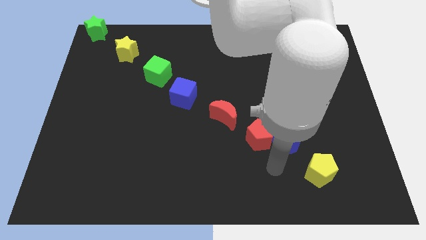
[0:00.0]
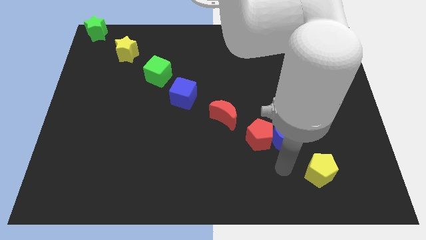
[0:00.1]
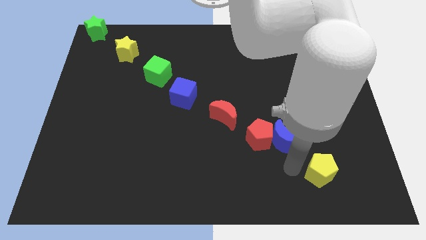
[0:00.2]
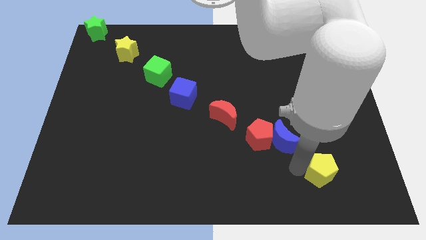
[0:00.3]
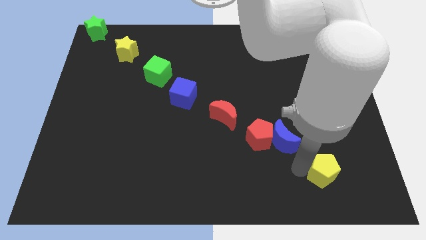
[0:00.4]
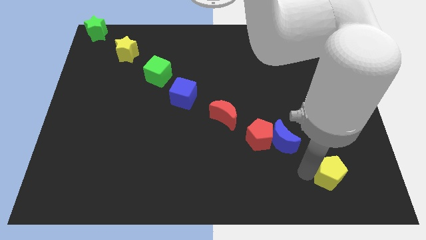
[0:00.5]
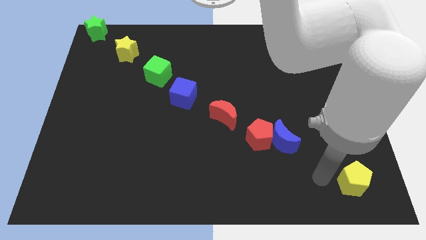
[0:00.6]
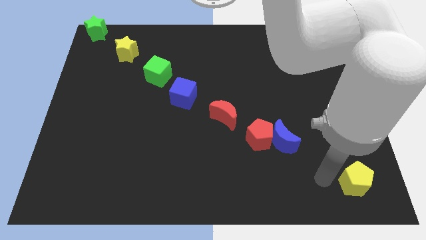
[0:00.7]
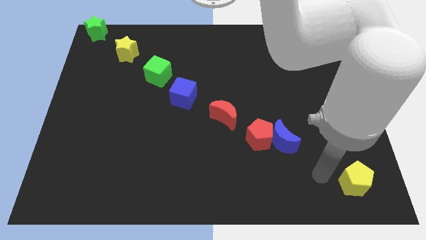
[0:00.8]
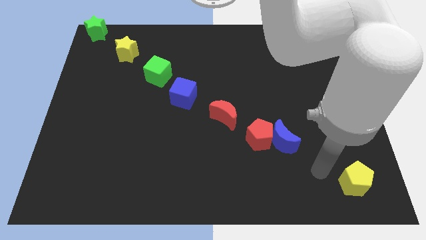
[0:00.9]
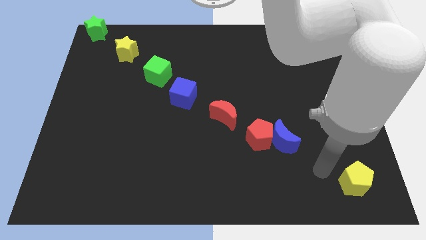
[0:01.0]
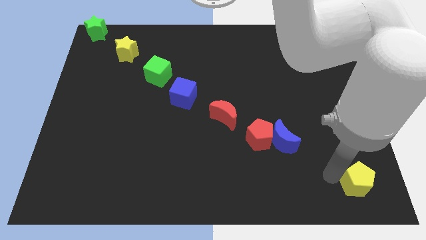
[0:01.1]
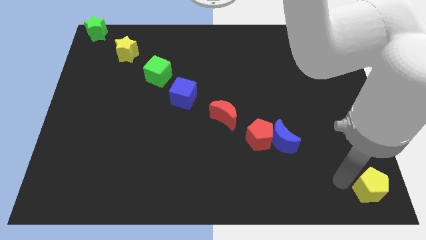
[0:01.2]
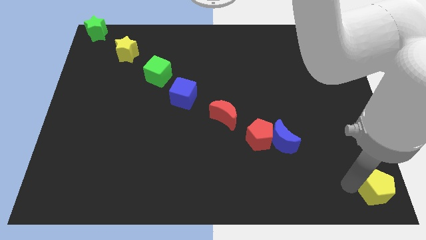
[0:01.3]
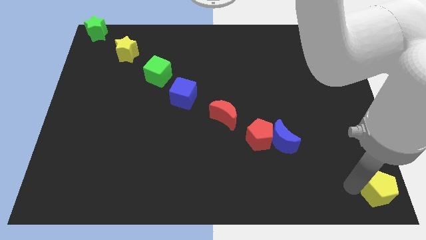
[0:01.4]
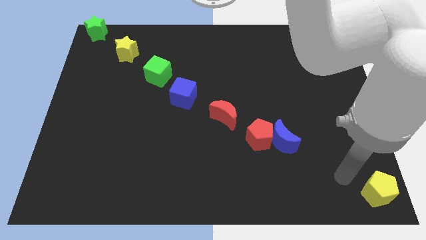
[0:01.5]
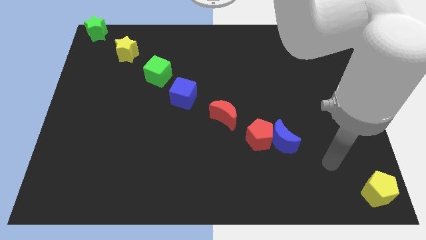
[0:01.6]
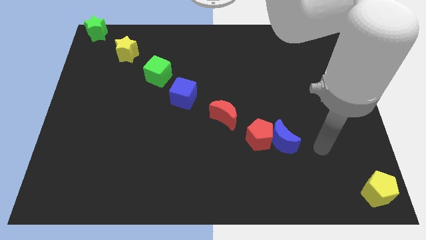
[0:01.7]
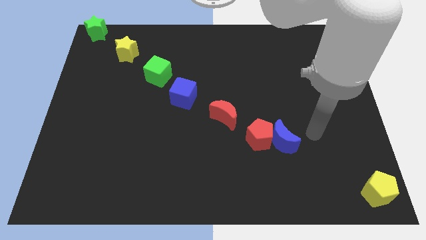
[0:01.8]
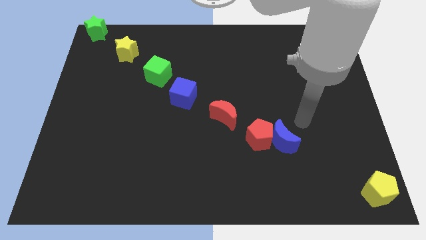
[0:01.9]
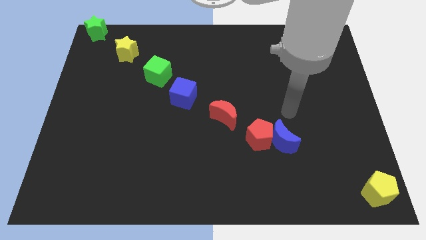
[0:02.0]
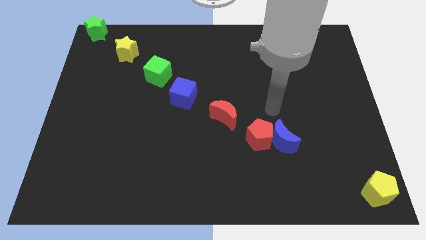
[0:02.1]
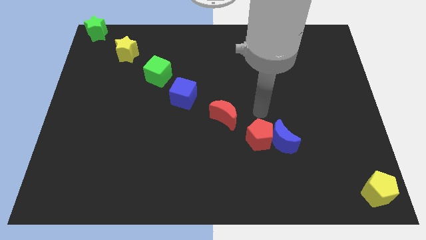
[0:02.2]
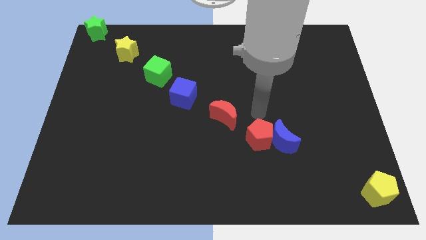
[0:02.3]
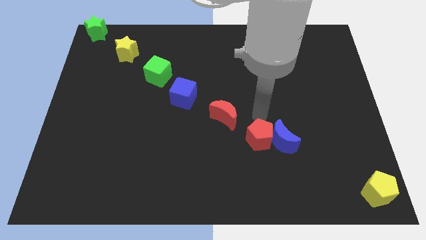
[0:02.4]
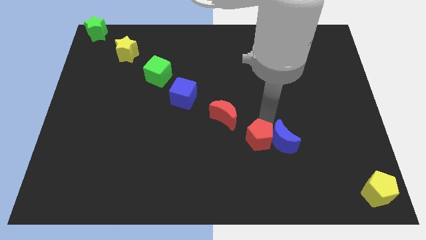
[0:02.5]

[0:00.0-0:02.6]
slide the yellow pentagon to the bottom right of the board

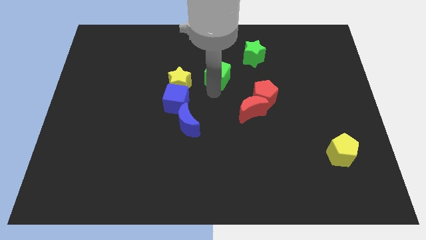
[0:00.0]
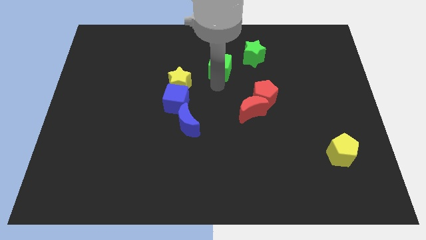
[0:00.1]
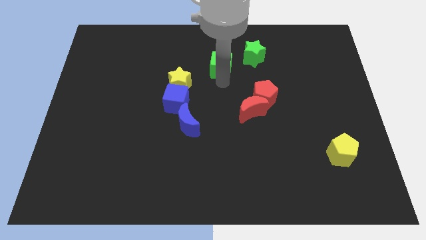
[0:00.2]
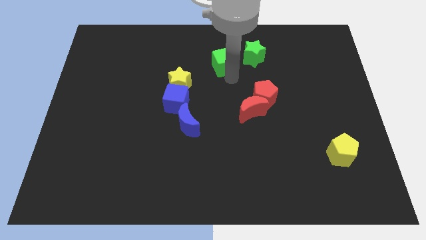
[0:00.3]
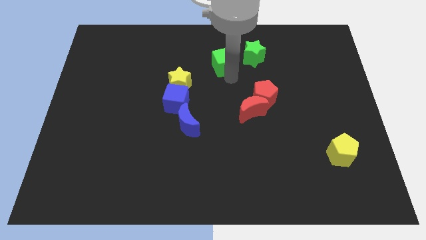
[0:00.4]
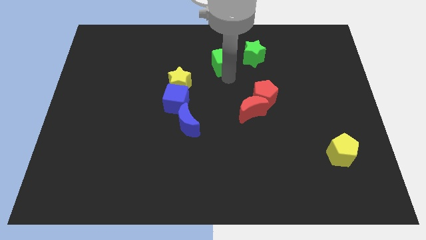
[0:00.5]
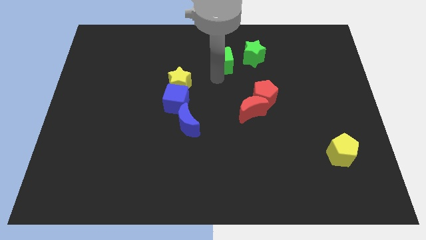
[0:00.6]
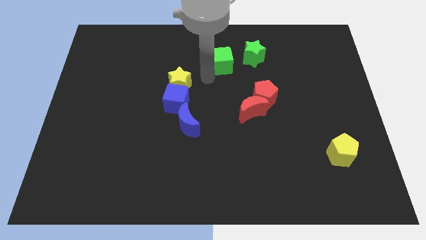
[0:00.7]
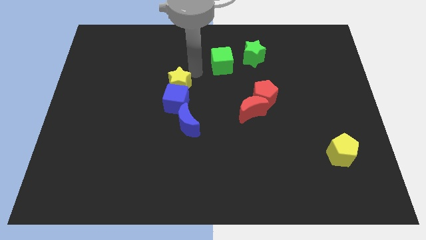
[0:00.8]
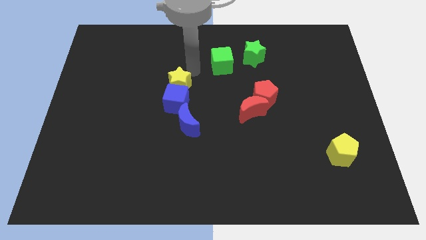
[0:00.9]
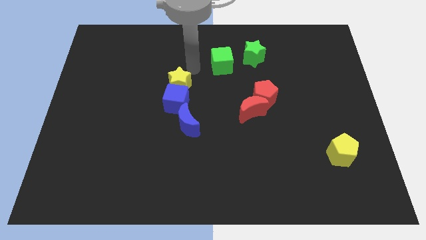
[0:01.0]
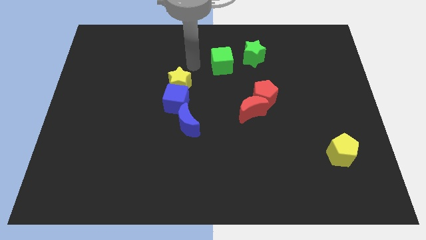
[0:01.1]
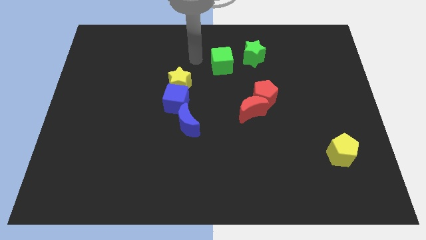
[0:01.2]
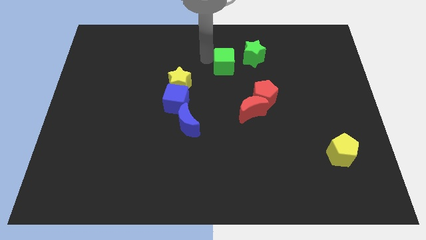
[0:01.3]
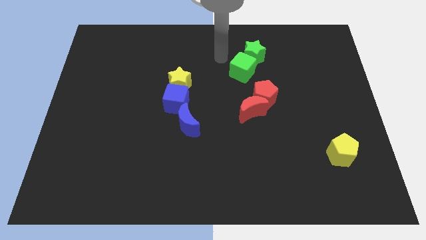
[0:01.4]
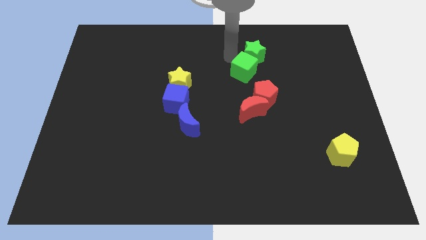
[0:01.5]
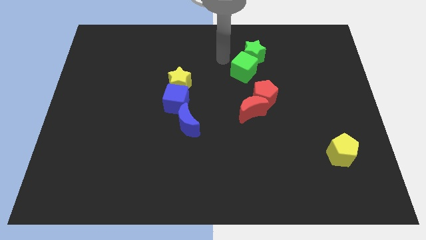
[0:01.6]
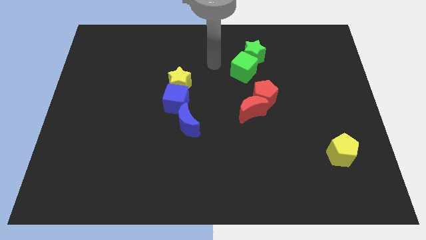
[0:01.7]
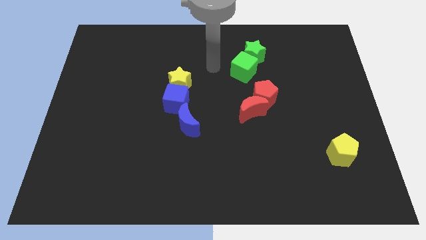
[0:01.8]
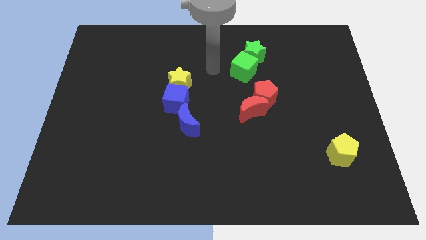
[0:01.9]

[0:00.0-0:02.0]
move the green cube into the green star

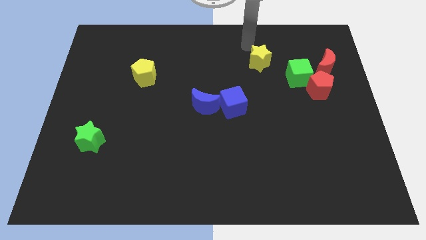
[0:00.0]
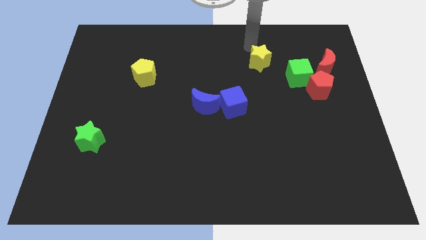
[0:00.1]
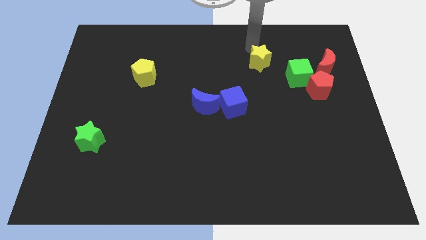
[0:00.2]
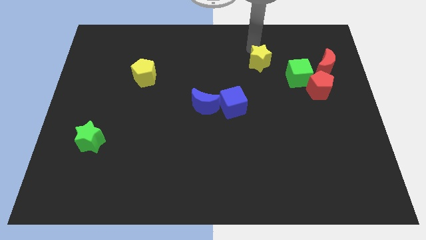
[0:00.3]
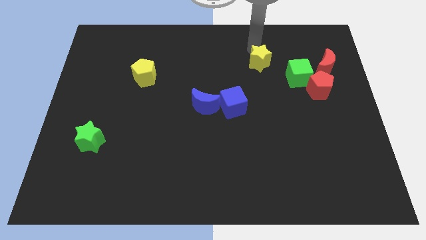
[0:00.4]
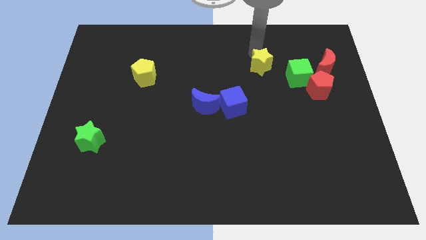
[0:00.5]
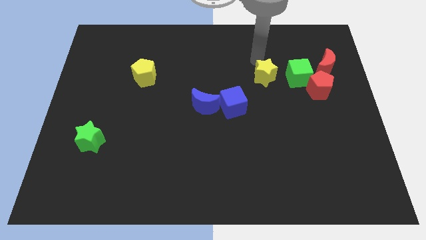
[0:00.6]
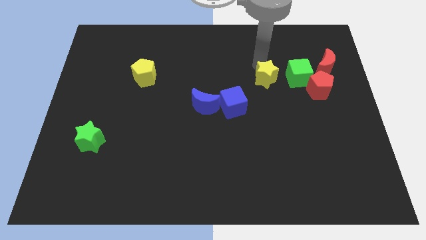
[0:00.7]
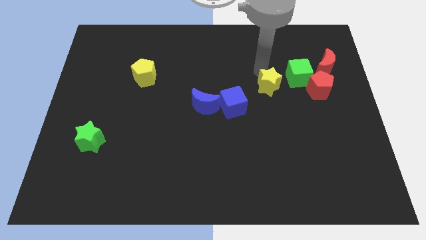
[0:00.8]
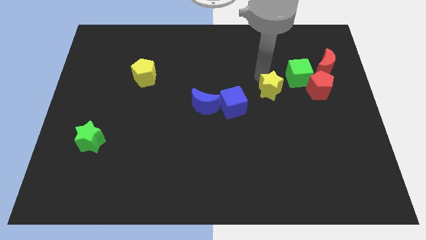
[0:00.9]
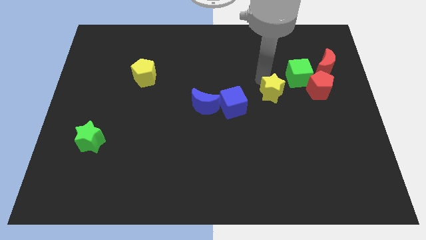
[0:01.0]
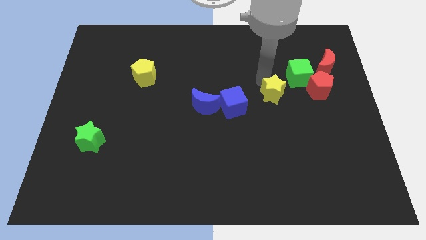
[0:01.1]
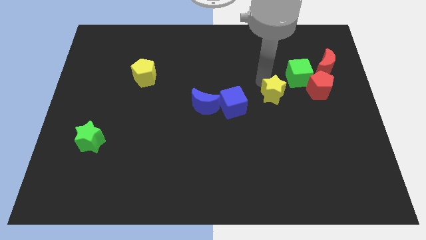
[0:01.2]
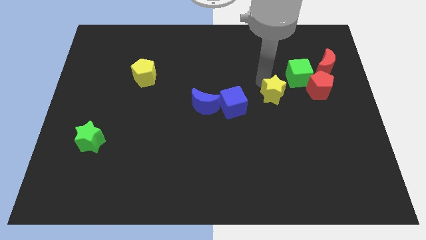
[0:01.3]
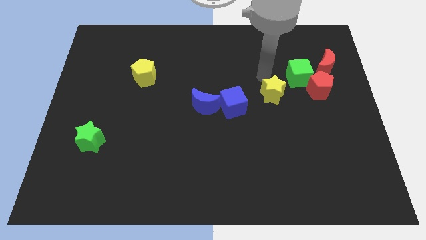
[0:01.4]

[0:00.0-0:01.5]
push the yellow star to the bottom left of the green cube

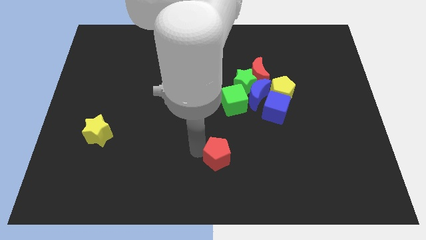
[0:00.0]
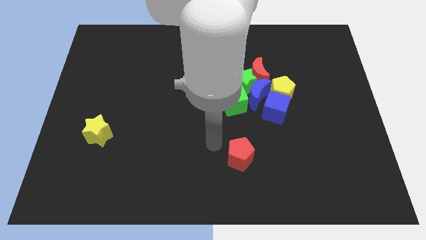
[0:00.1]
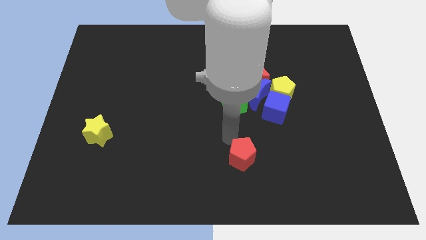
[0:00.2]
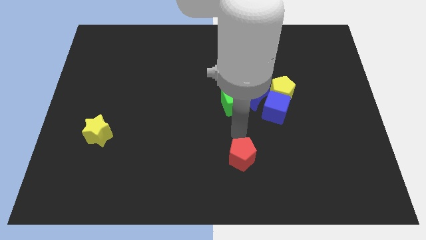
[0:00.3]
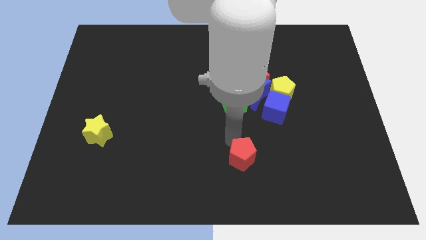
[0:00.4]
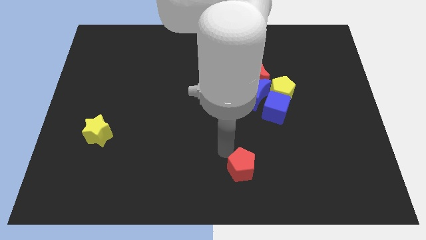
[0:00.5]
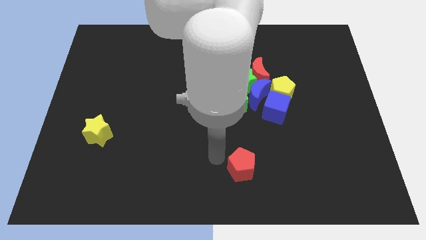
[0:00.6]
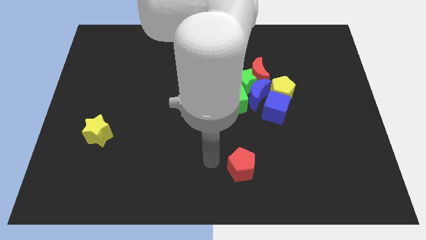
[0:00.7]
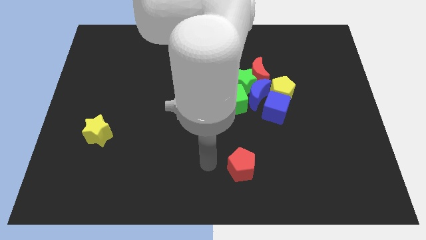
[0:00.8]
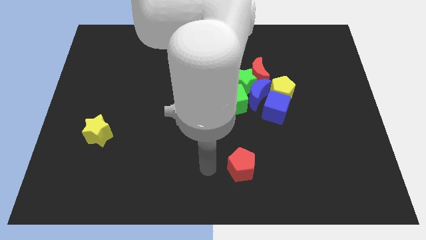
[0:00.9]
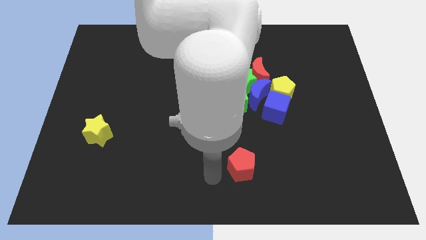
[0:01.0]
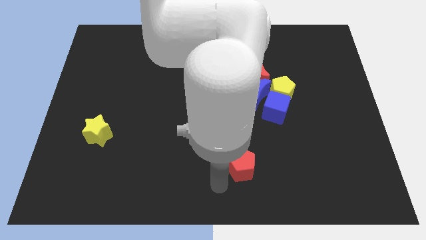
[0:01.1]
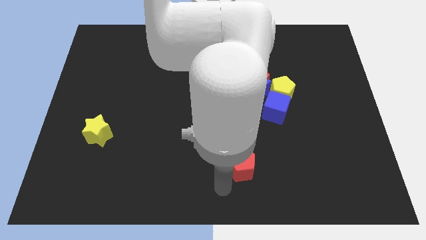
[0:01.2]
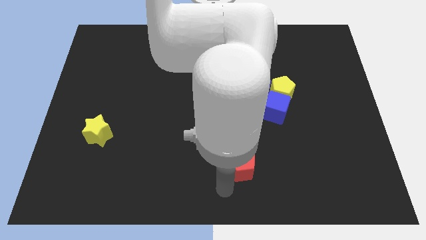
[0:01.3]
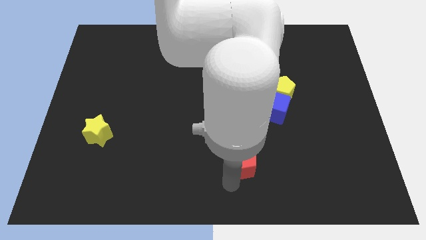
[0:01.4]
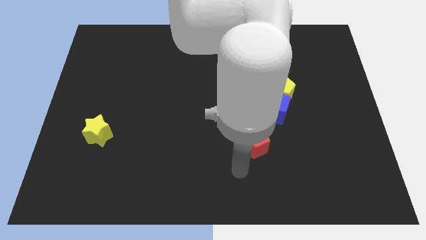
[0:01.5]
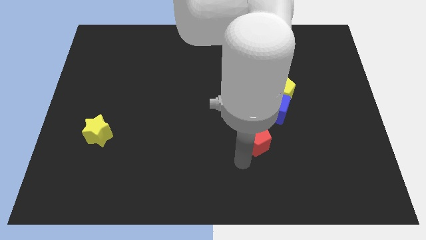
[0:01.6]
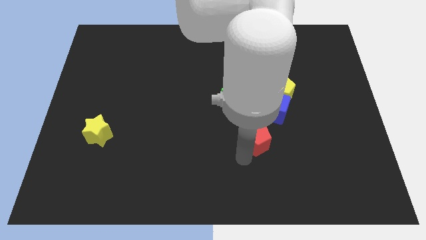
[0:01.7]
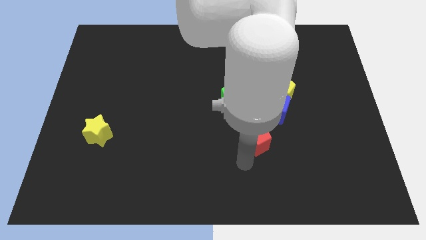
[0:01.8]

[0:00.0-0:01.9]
push the red pentagon towards the right of the board

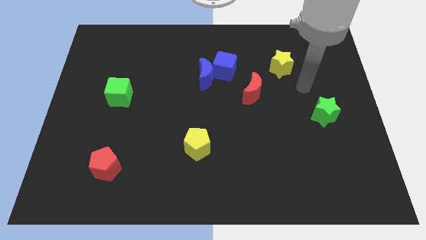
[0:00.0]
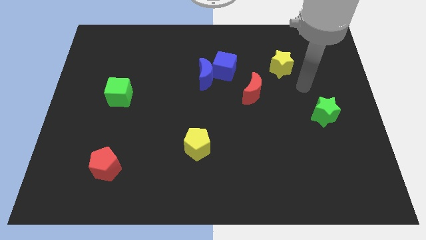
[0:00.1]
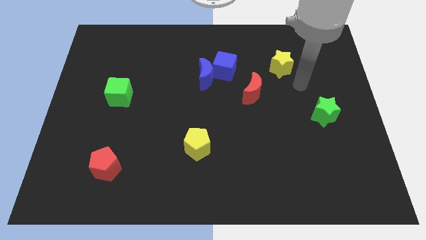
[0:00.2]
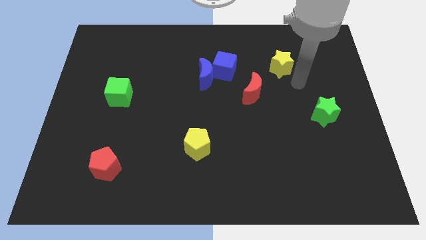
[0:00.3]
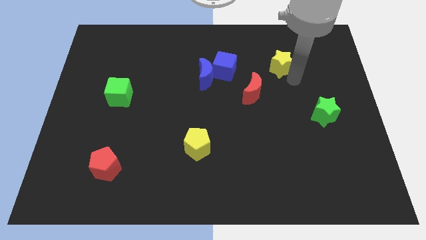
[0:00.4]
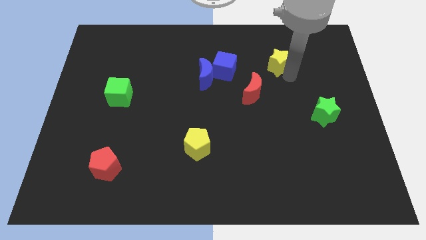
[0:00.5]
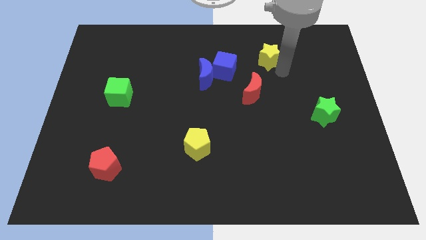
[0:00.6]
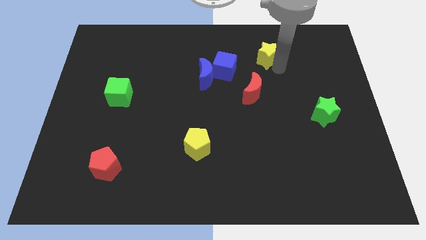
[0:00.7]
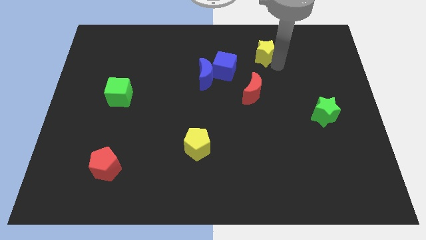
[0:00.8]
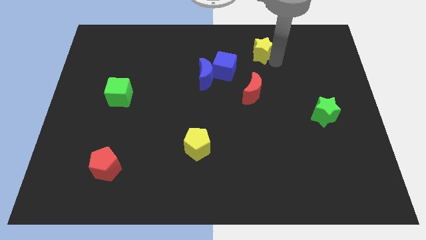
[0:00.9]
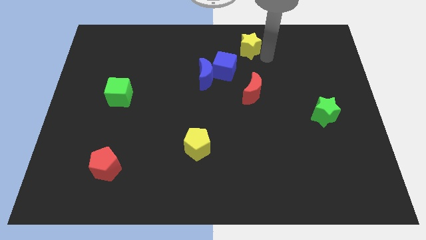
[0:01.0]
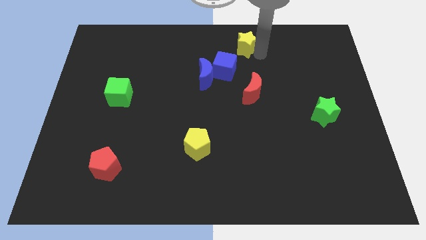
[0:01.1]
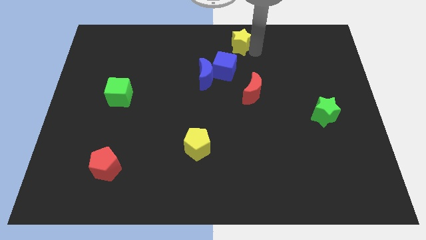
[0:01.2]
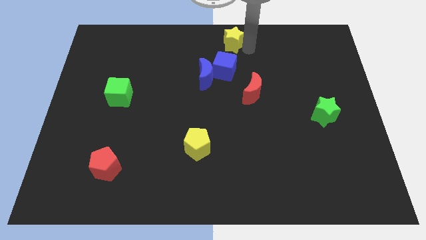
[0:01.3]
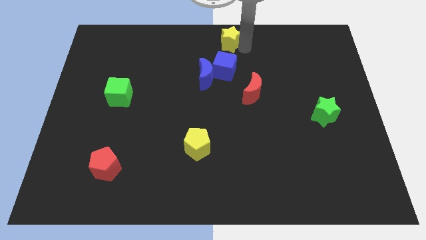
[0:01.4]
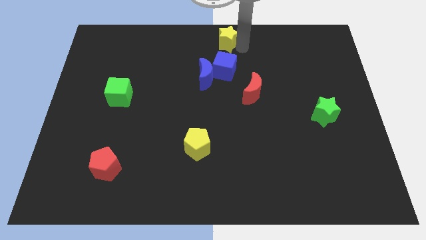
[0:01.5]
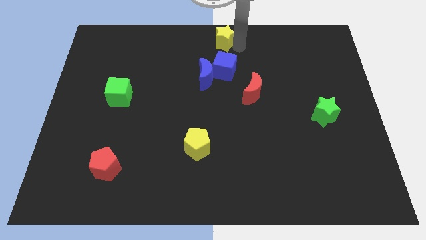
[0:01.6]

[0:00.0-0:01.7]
put the yellow star above the blue cube
